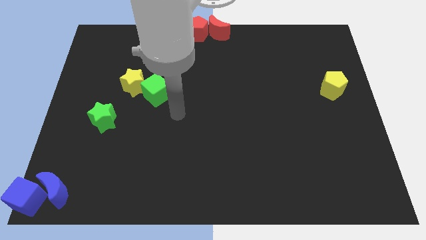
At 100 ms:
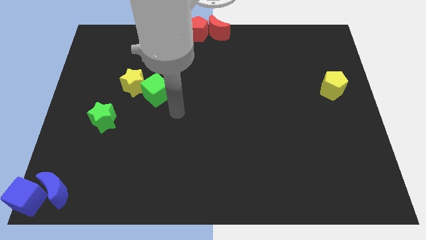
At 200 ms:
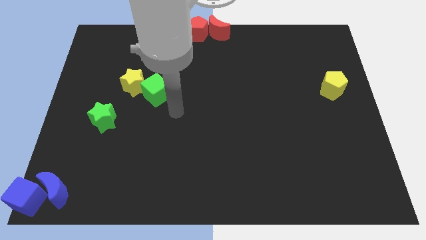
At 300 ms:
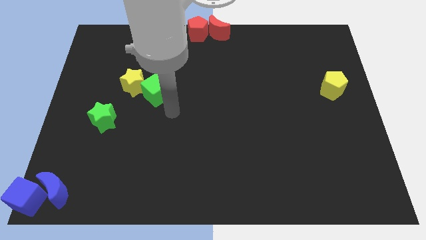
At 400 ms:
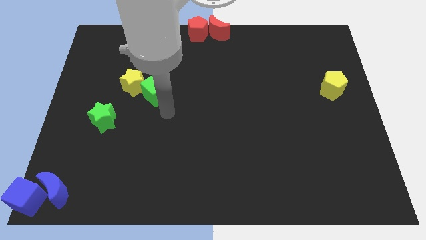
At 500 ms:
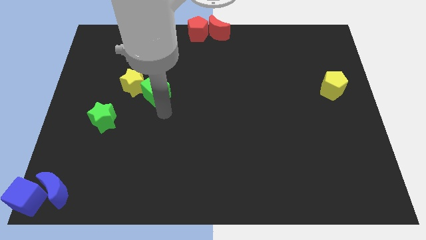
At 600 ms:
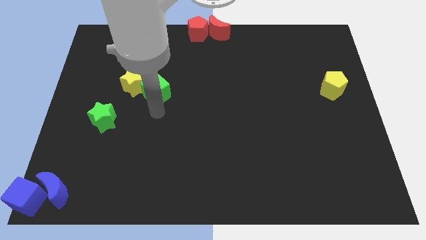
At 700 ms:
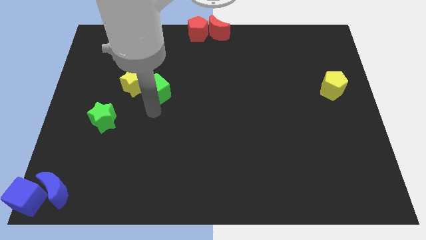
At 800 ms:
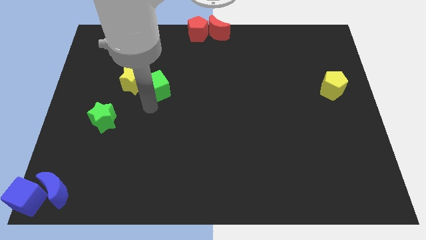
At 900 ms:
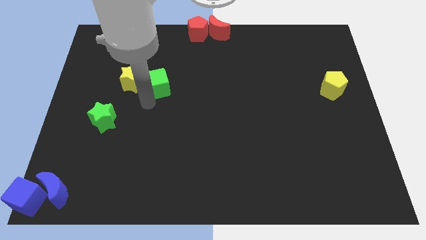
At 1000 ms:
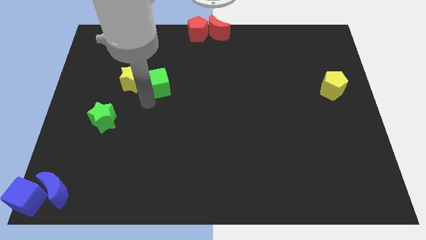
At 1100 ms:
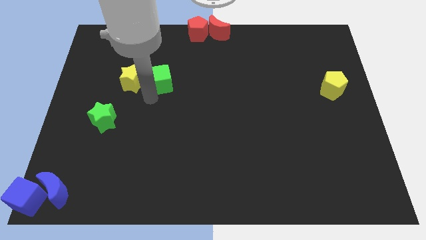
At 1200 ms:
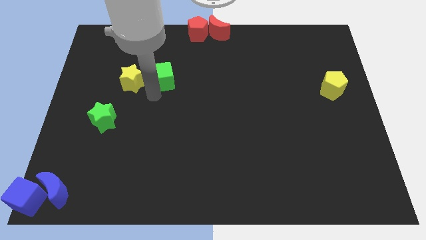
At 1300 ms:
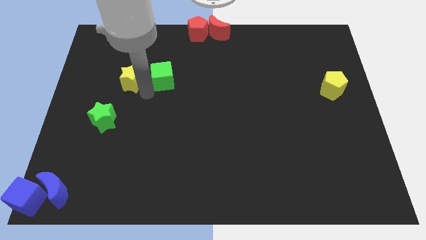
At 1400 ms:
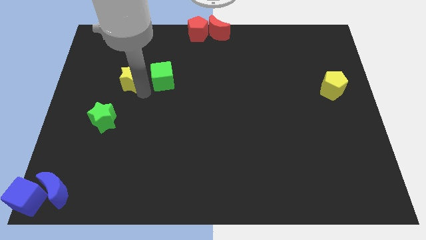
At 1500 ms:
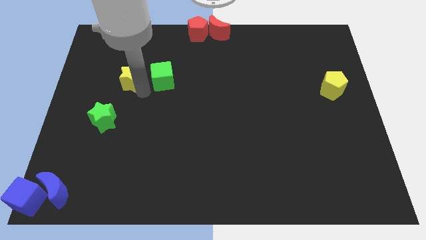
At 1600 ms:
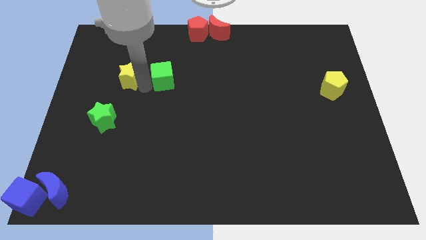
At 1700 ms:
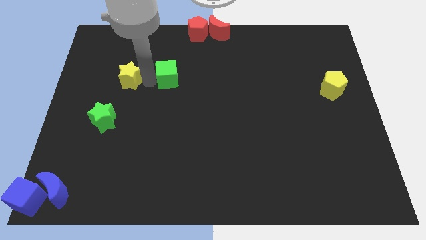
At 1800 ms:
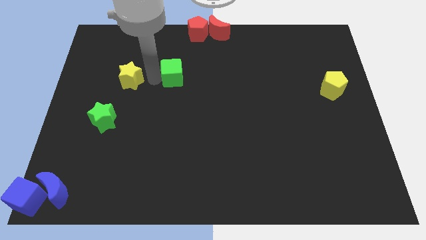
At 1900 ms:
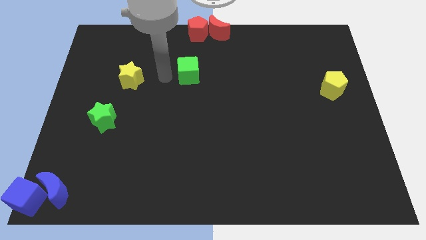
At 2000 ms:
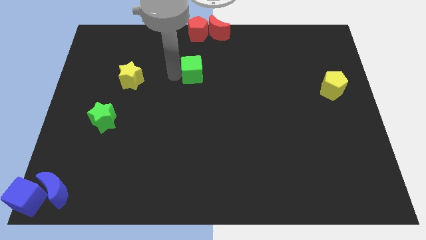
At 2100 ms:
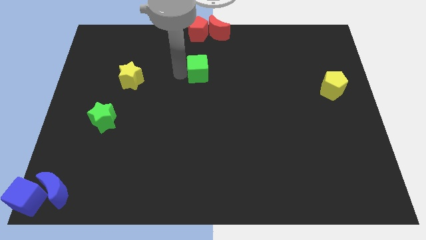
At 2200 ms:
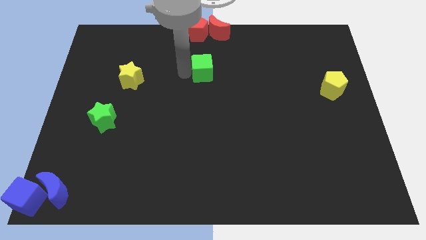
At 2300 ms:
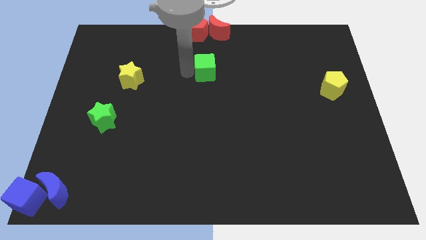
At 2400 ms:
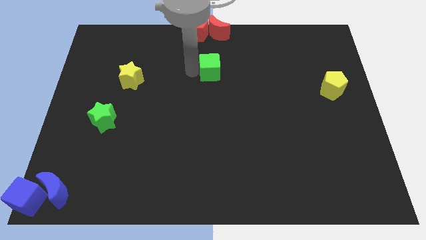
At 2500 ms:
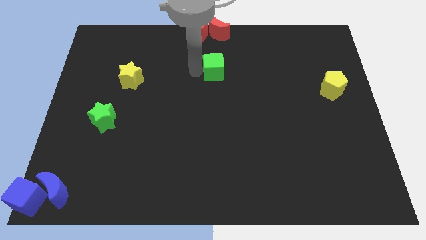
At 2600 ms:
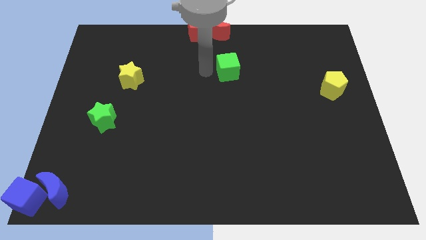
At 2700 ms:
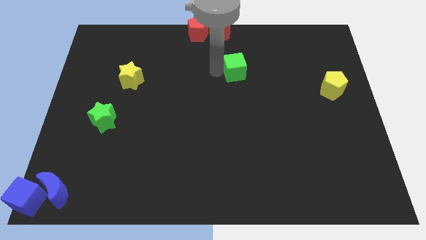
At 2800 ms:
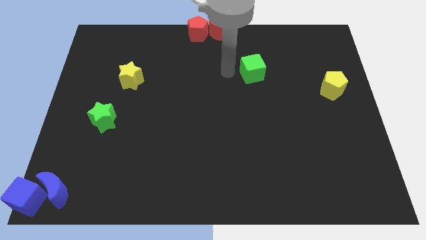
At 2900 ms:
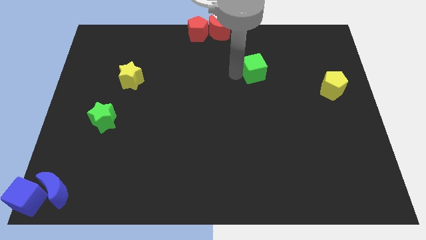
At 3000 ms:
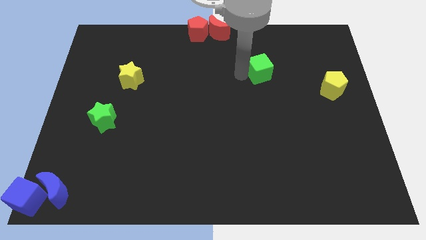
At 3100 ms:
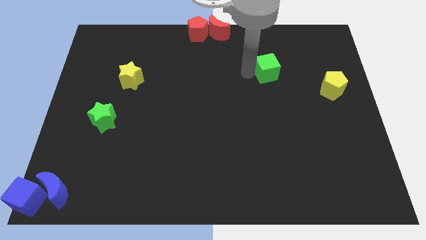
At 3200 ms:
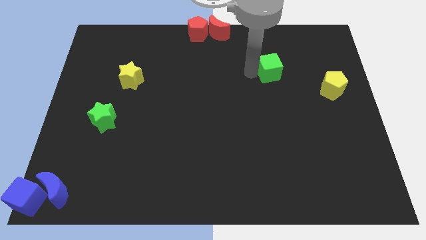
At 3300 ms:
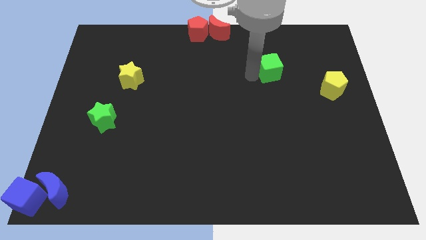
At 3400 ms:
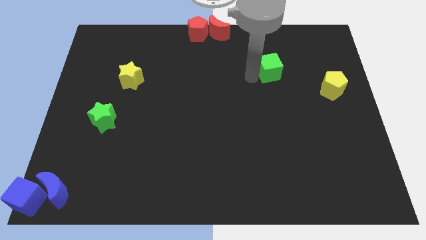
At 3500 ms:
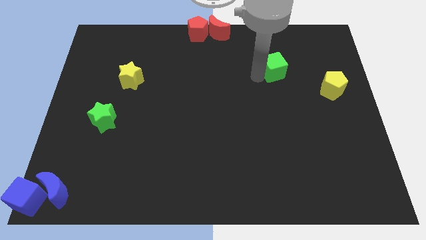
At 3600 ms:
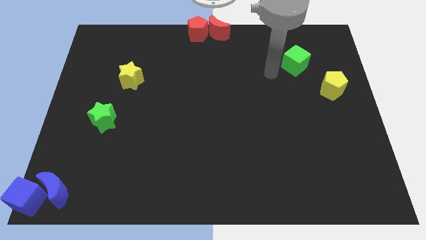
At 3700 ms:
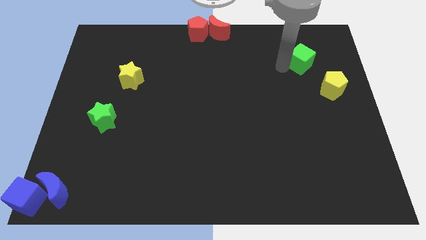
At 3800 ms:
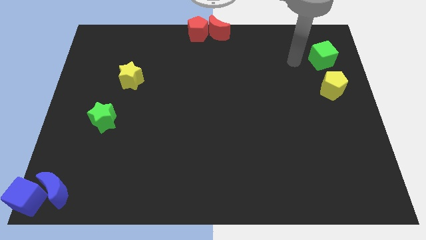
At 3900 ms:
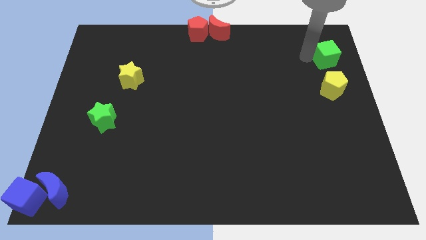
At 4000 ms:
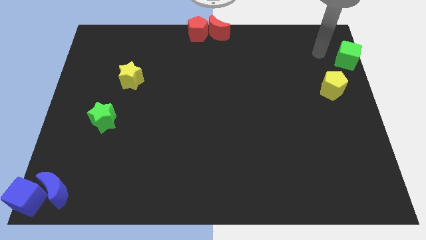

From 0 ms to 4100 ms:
push green cube above yellow pentagon

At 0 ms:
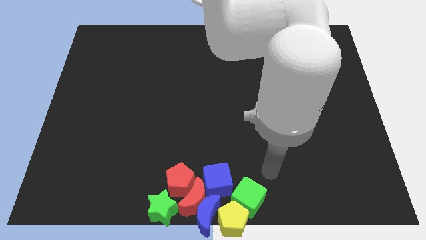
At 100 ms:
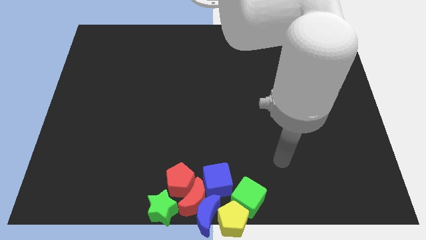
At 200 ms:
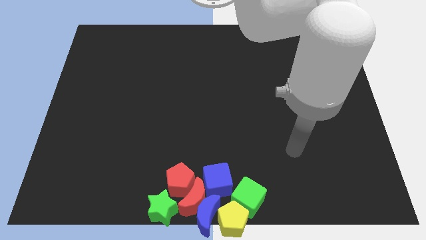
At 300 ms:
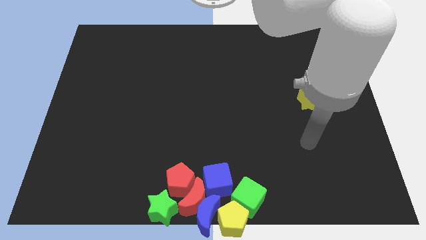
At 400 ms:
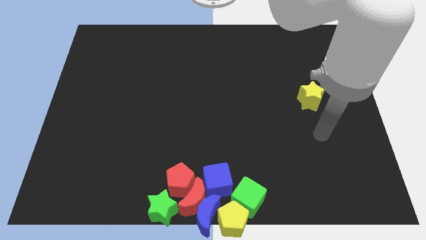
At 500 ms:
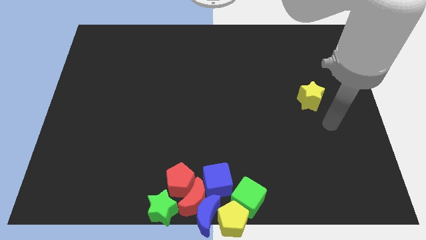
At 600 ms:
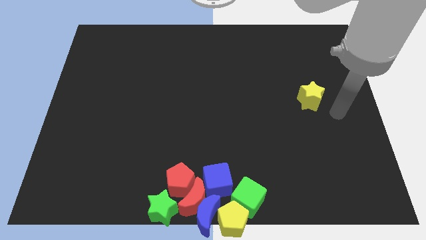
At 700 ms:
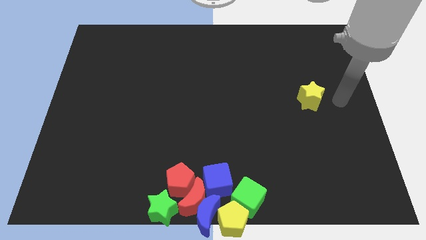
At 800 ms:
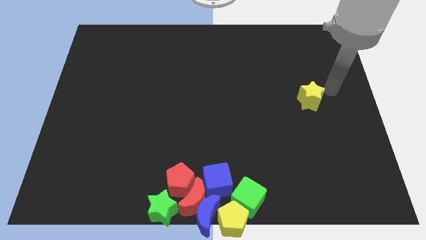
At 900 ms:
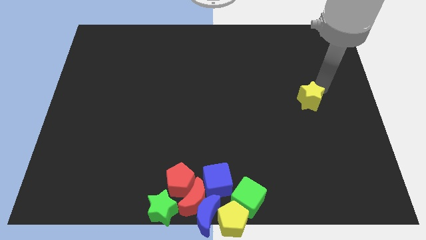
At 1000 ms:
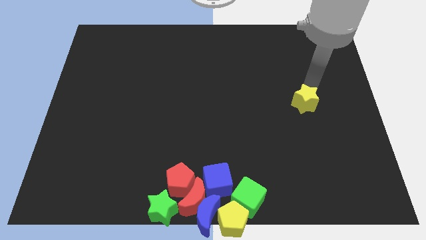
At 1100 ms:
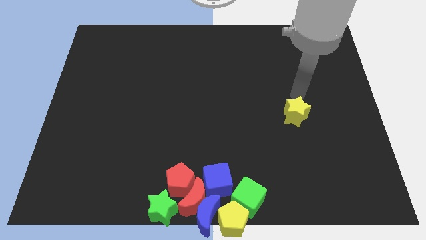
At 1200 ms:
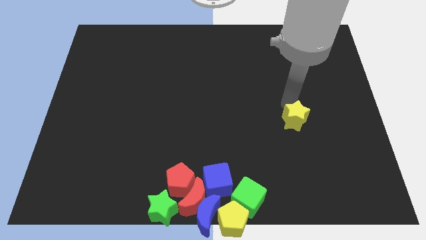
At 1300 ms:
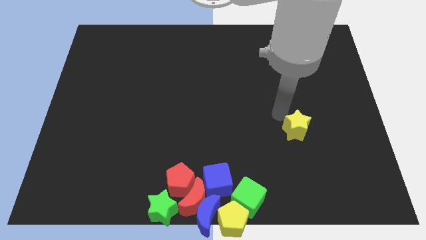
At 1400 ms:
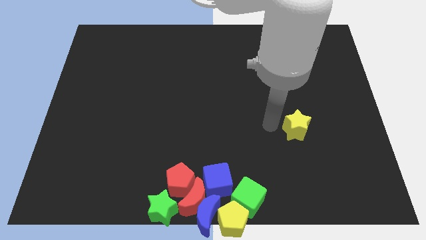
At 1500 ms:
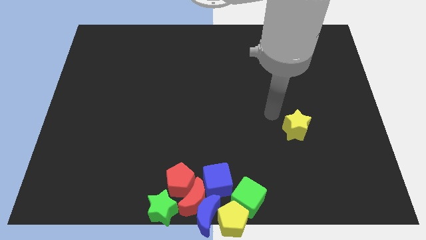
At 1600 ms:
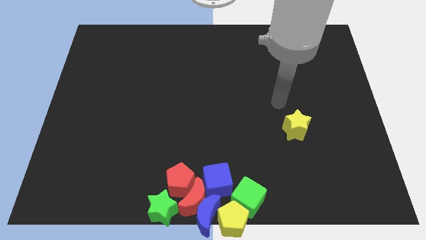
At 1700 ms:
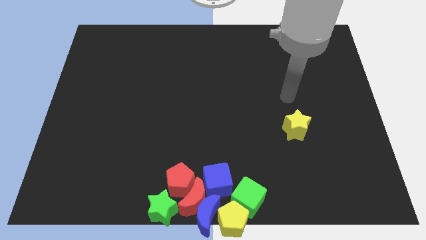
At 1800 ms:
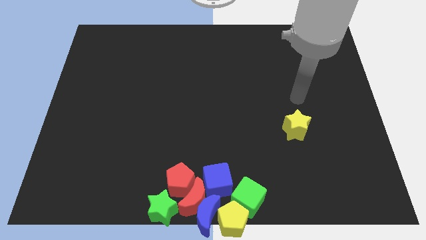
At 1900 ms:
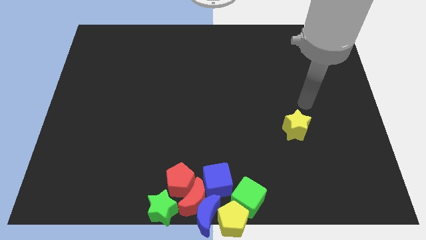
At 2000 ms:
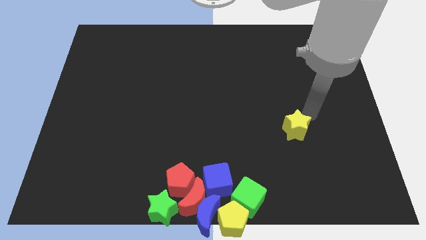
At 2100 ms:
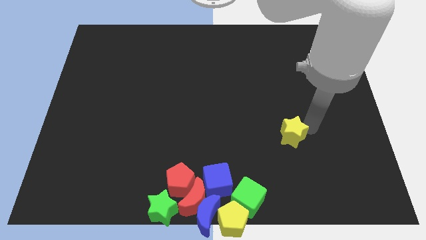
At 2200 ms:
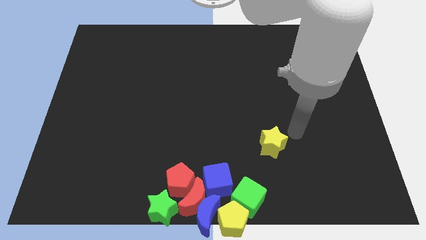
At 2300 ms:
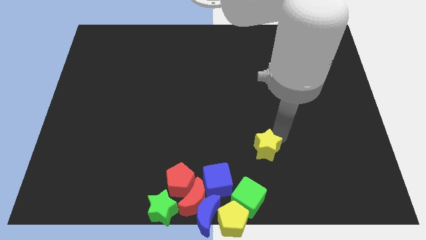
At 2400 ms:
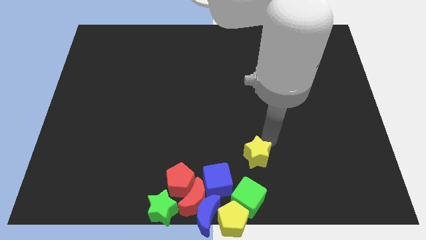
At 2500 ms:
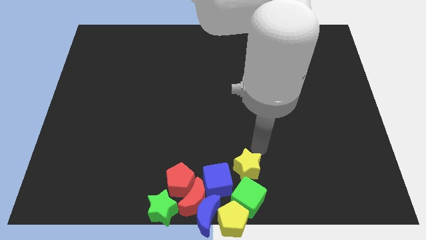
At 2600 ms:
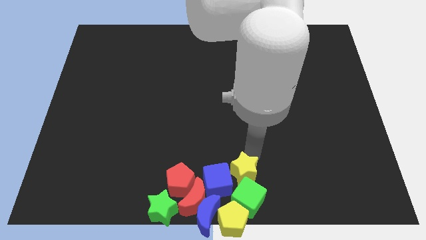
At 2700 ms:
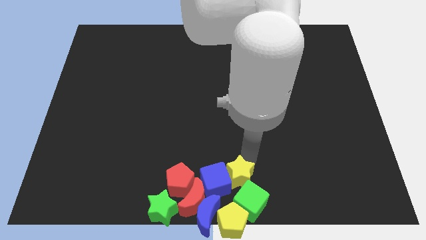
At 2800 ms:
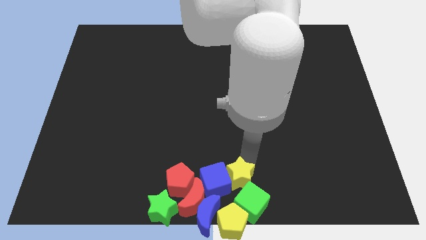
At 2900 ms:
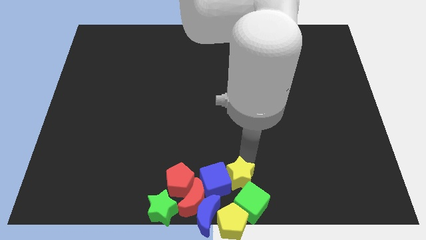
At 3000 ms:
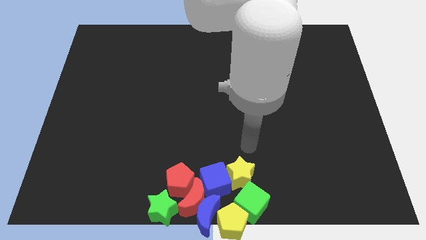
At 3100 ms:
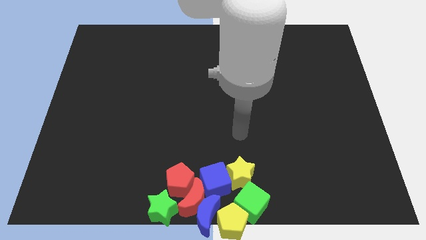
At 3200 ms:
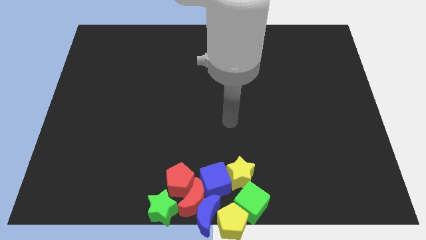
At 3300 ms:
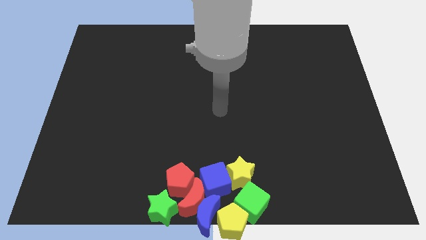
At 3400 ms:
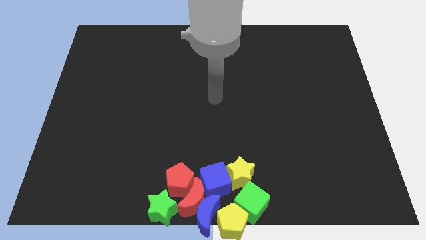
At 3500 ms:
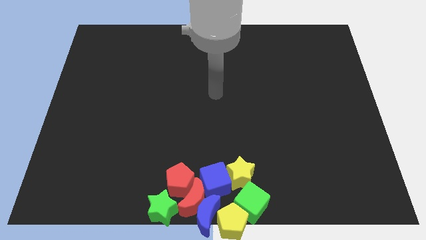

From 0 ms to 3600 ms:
push the yellow star towards the group of blocks

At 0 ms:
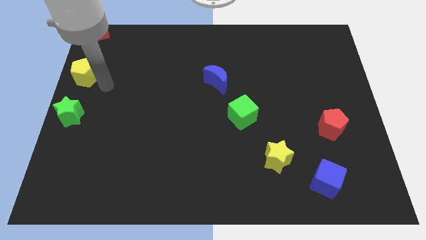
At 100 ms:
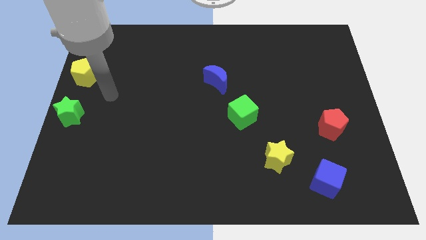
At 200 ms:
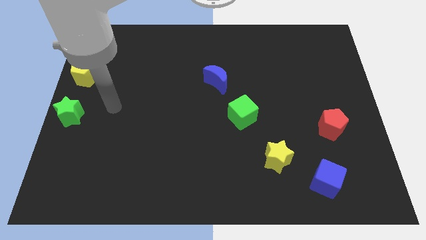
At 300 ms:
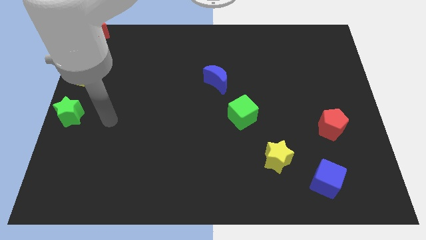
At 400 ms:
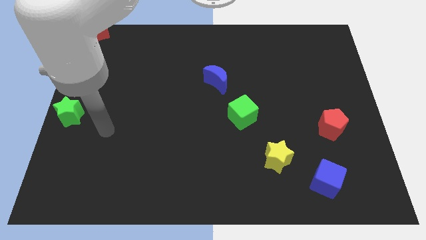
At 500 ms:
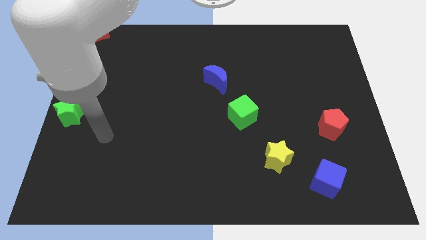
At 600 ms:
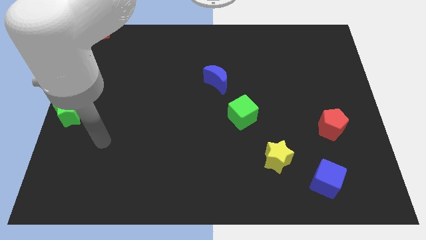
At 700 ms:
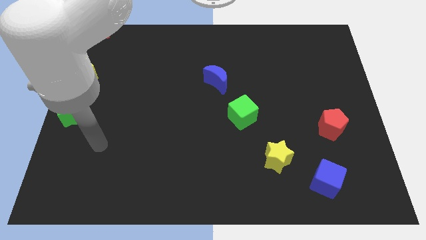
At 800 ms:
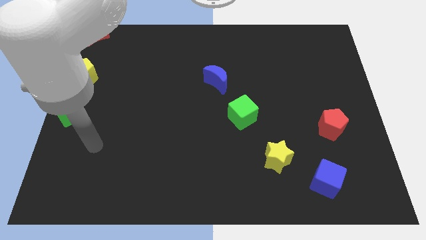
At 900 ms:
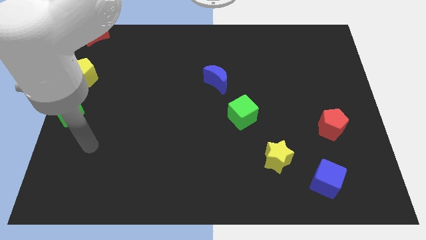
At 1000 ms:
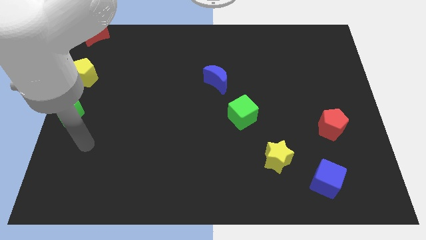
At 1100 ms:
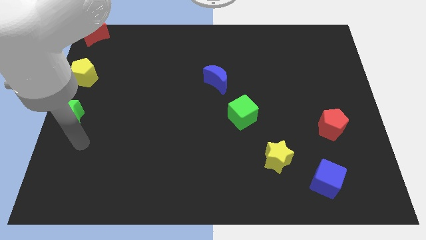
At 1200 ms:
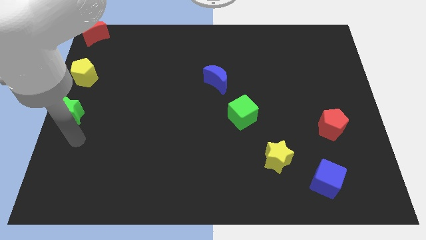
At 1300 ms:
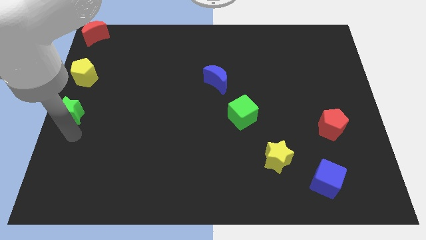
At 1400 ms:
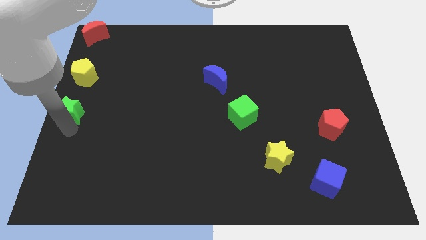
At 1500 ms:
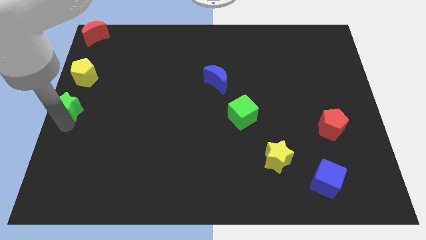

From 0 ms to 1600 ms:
place your arm to touch the bottom of the green star
